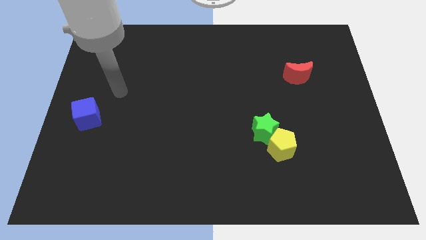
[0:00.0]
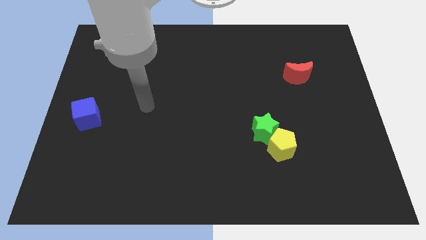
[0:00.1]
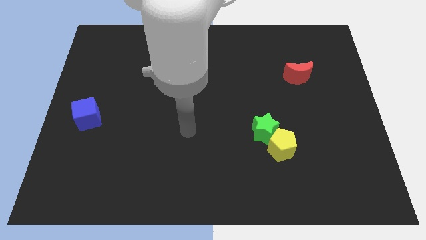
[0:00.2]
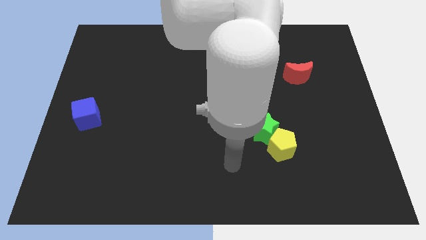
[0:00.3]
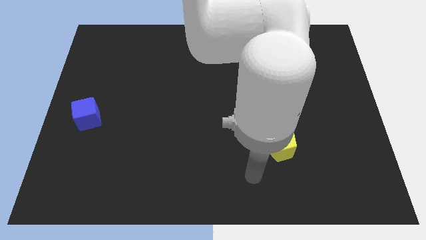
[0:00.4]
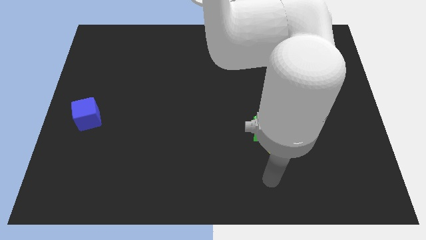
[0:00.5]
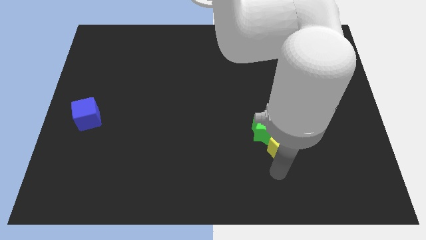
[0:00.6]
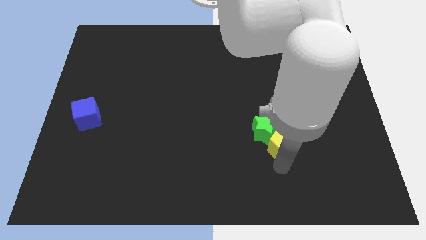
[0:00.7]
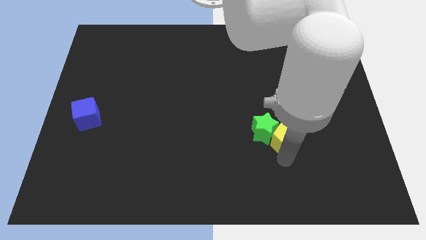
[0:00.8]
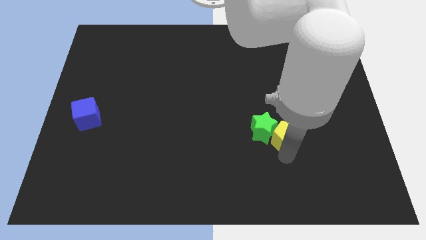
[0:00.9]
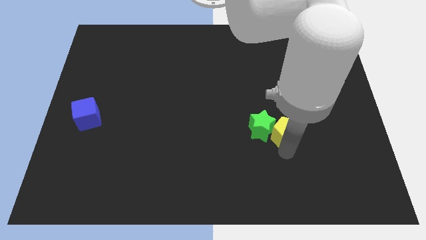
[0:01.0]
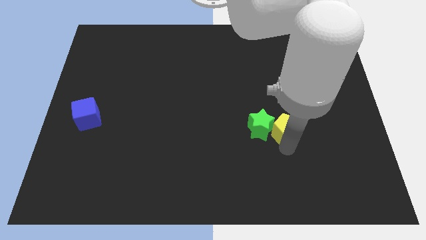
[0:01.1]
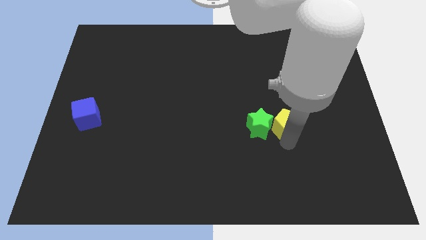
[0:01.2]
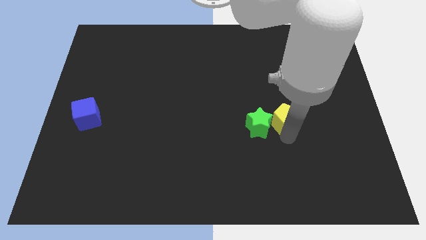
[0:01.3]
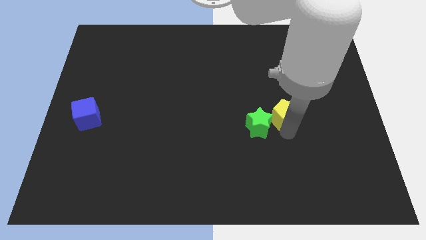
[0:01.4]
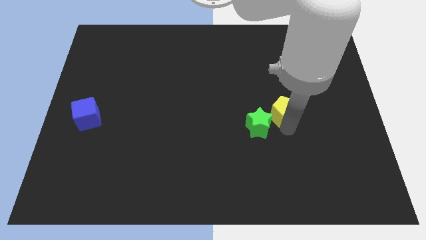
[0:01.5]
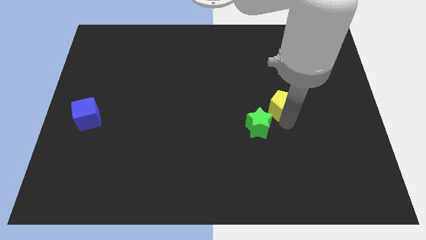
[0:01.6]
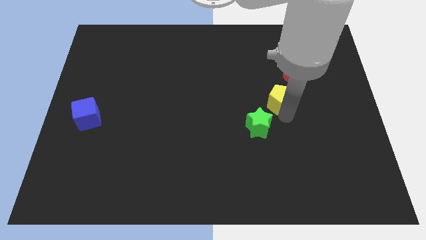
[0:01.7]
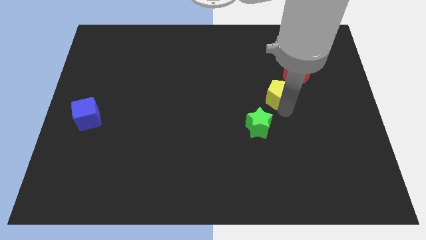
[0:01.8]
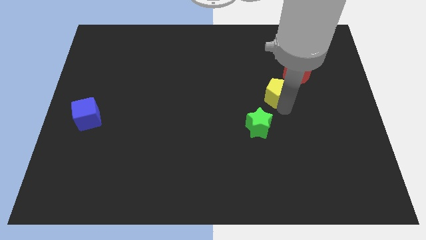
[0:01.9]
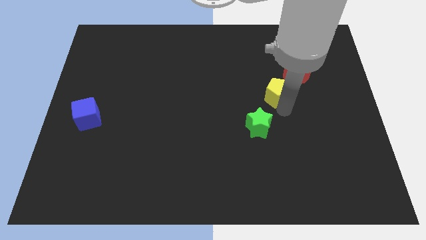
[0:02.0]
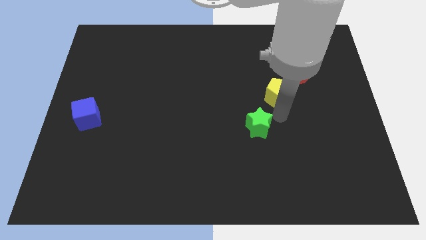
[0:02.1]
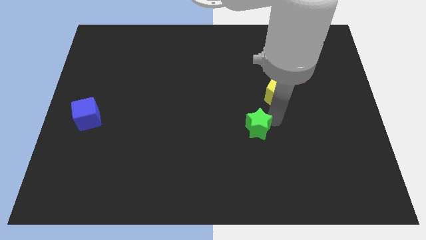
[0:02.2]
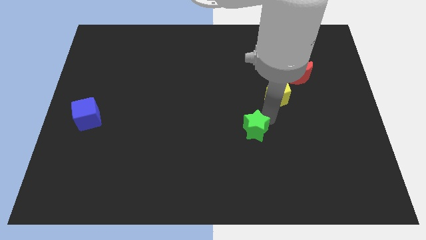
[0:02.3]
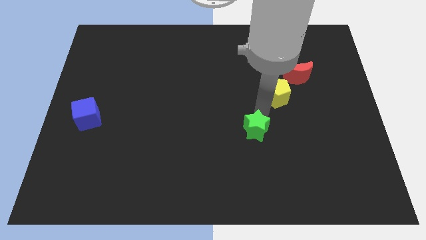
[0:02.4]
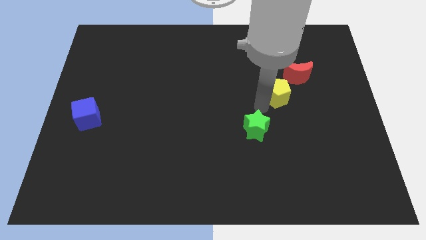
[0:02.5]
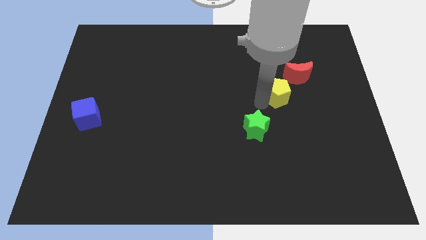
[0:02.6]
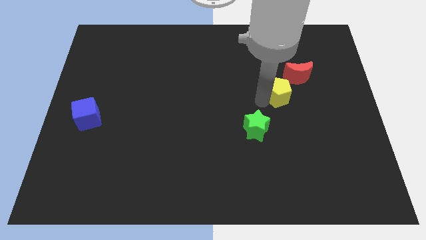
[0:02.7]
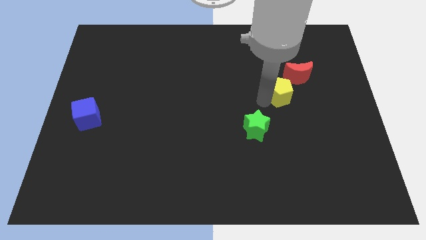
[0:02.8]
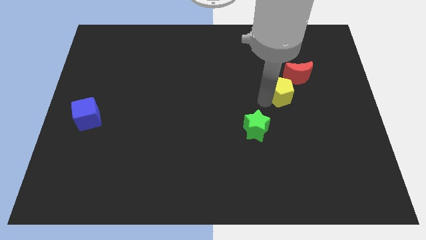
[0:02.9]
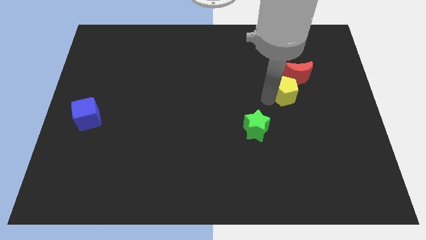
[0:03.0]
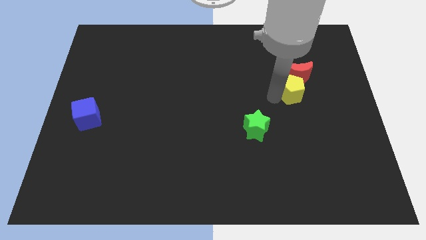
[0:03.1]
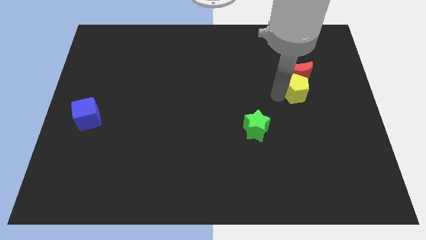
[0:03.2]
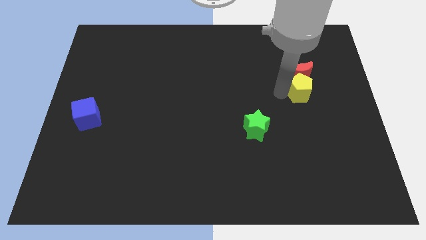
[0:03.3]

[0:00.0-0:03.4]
move the pentagon close to the red moon

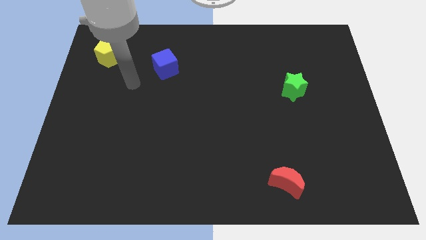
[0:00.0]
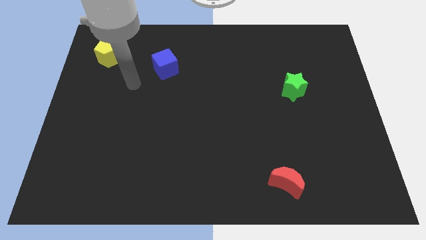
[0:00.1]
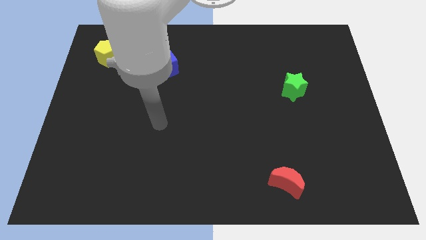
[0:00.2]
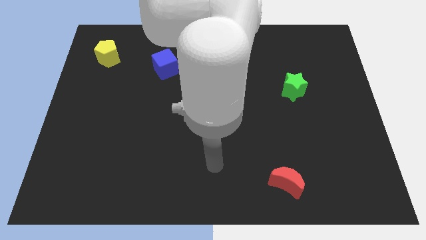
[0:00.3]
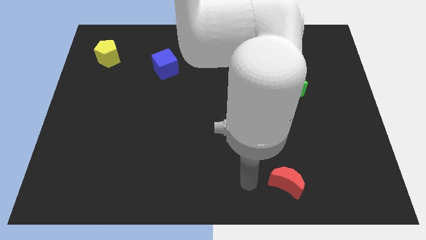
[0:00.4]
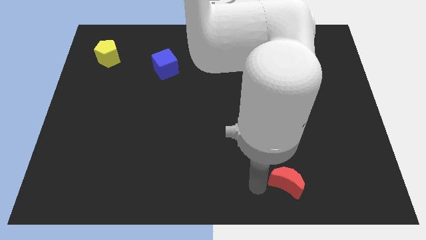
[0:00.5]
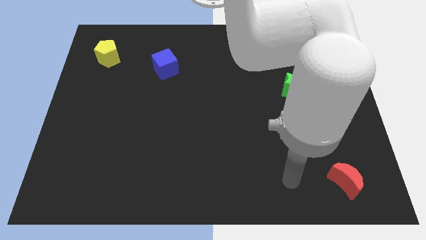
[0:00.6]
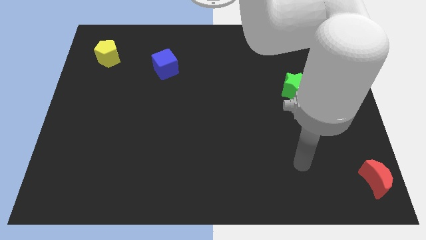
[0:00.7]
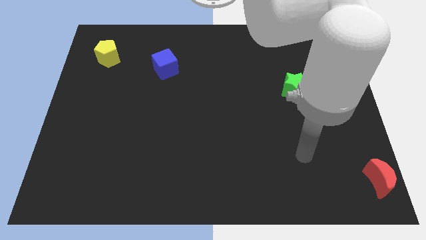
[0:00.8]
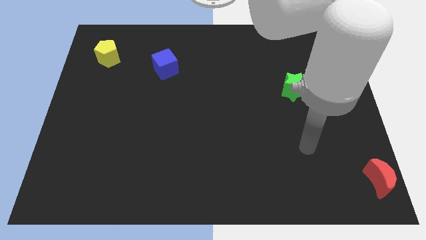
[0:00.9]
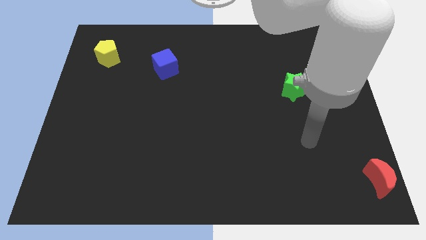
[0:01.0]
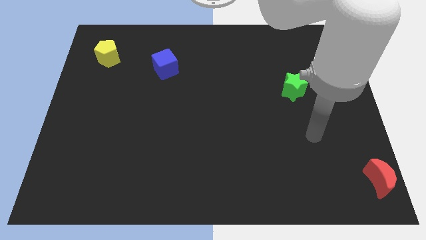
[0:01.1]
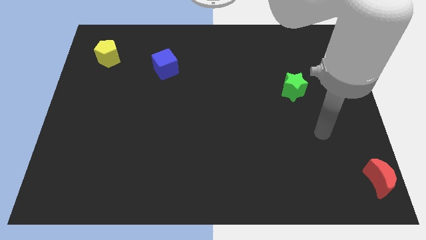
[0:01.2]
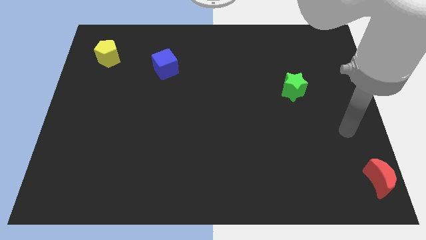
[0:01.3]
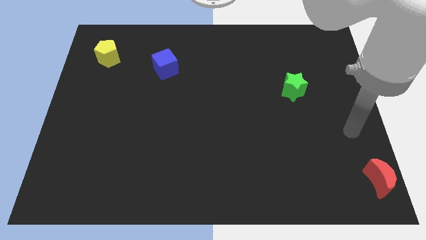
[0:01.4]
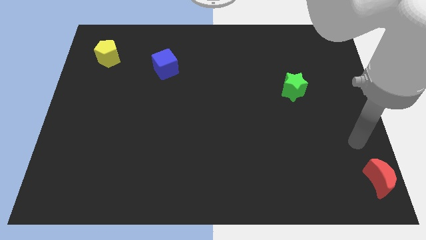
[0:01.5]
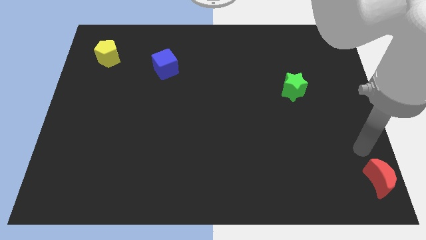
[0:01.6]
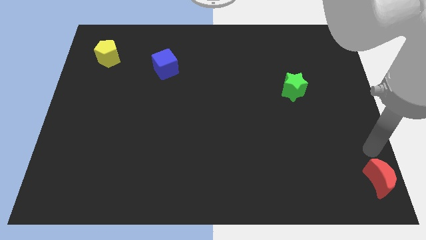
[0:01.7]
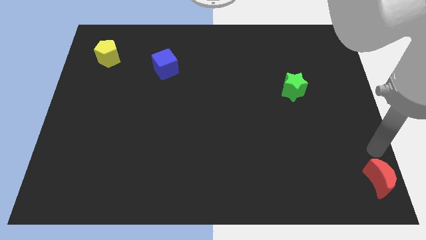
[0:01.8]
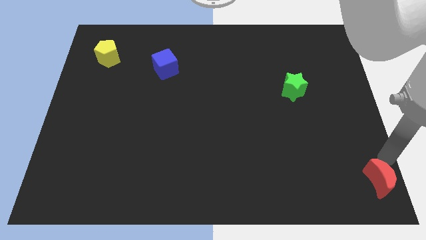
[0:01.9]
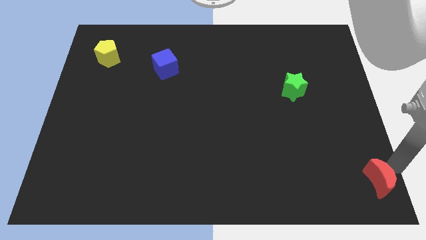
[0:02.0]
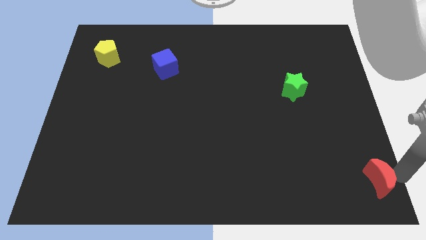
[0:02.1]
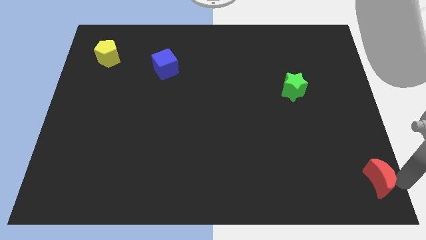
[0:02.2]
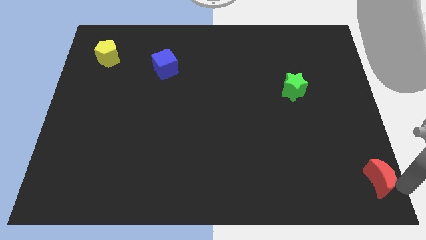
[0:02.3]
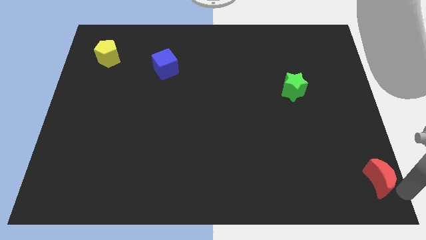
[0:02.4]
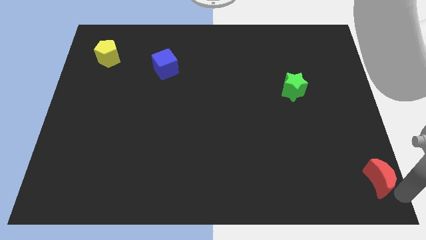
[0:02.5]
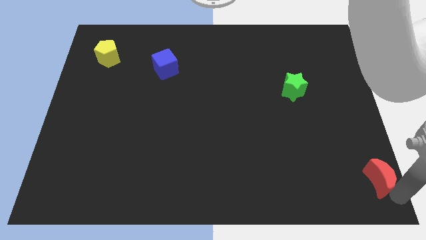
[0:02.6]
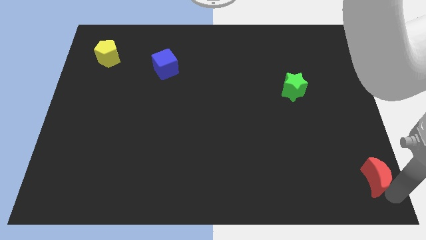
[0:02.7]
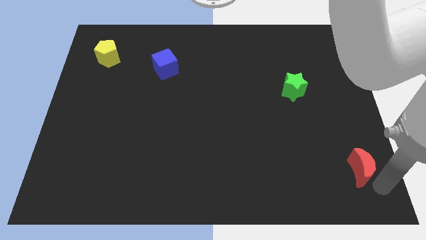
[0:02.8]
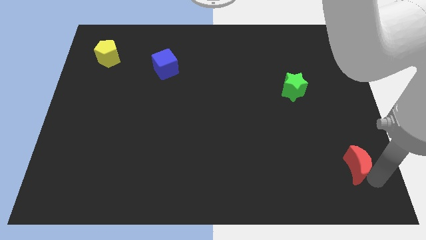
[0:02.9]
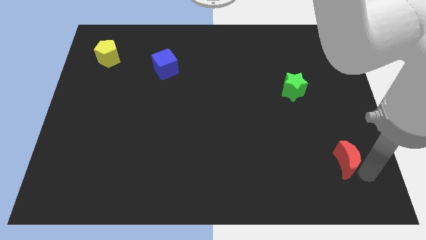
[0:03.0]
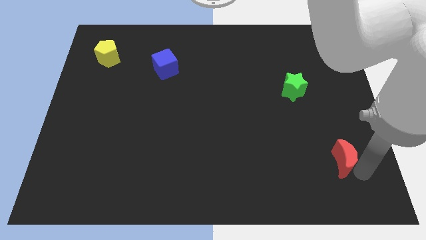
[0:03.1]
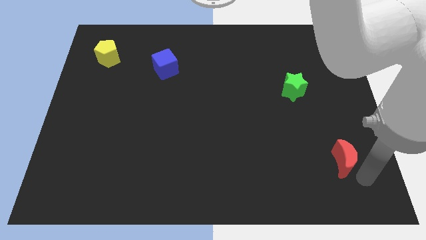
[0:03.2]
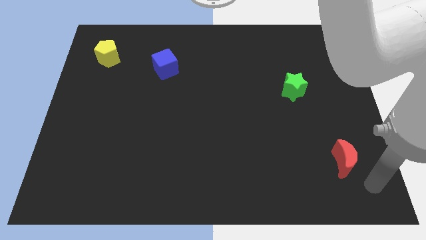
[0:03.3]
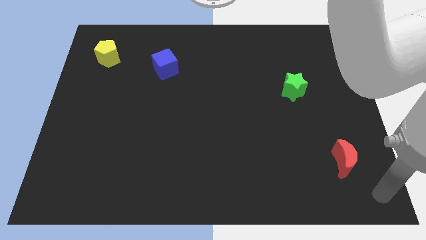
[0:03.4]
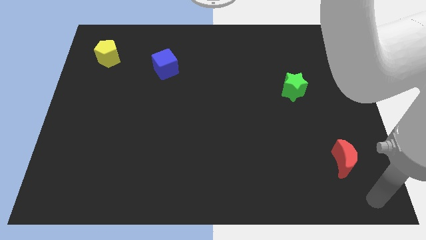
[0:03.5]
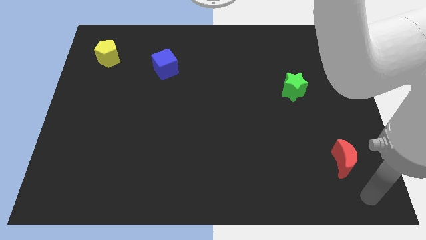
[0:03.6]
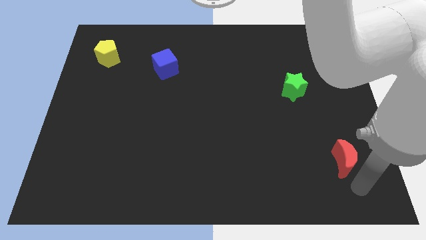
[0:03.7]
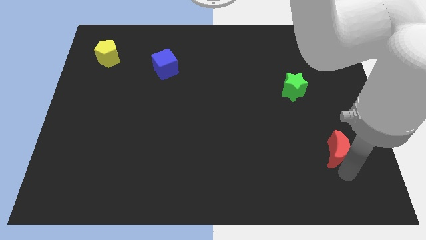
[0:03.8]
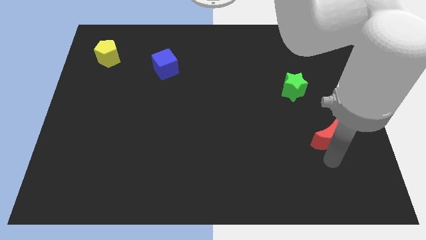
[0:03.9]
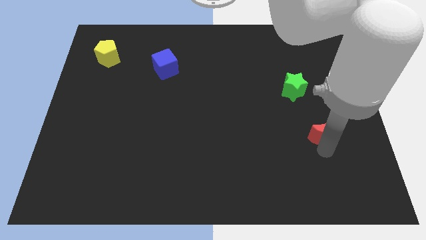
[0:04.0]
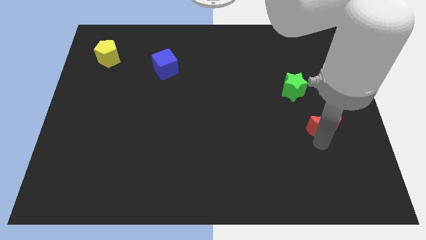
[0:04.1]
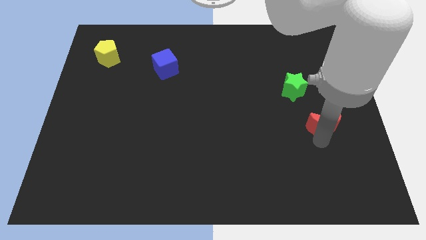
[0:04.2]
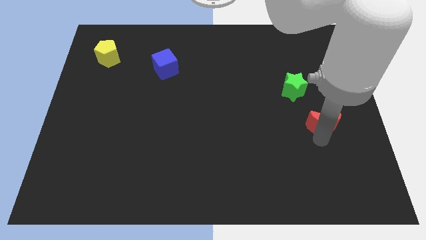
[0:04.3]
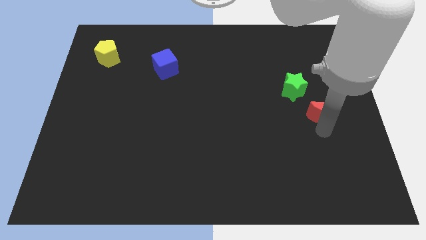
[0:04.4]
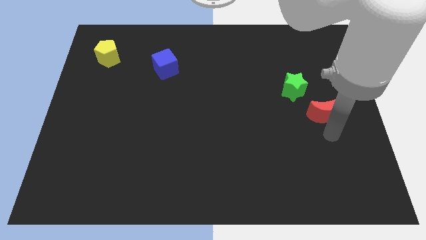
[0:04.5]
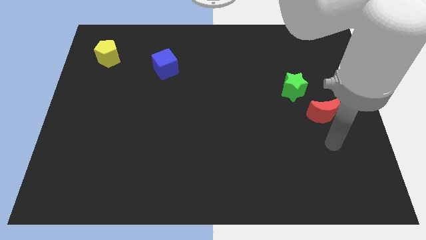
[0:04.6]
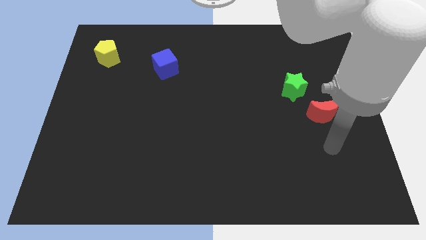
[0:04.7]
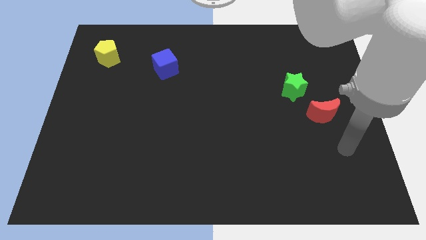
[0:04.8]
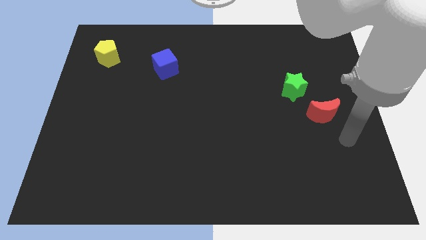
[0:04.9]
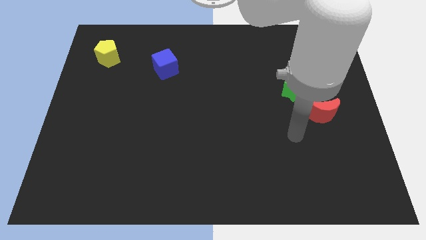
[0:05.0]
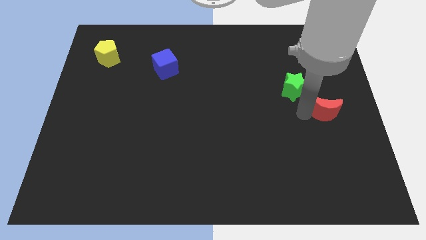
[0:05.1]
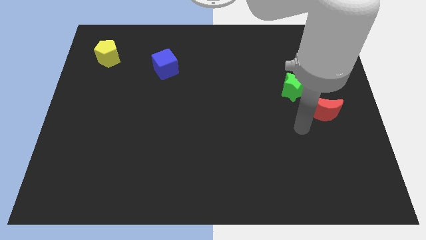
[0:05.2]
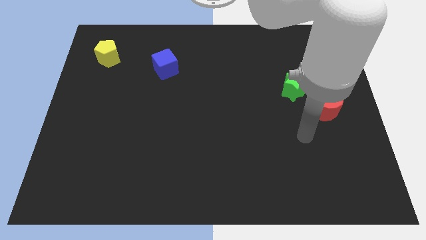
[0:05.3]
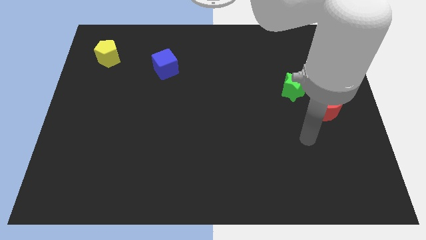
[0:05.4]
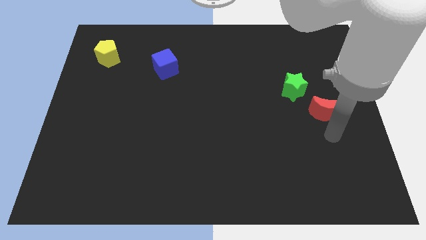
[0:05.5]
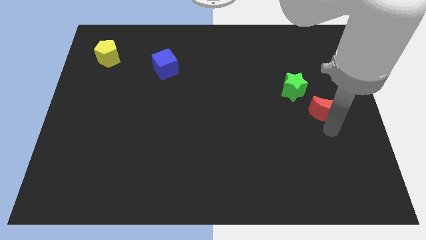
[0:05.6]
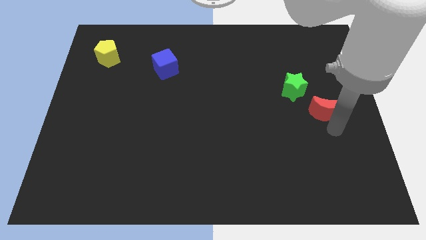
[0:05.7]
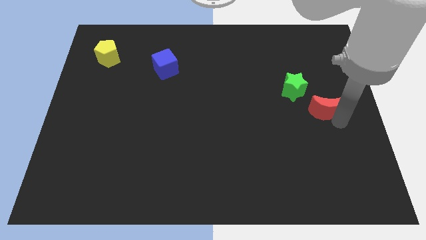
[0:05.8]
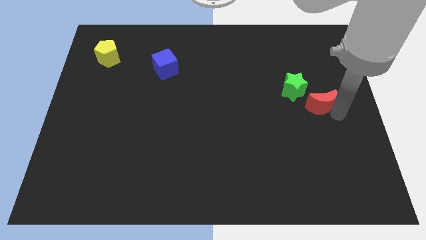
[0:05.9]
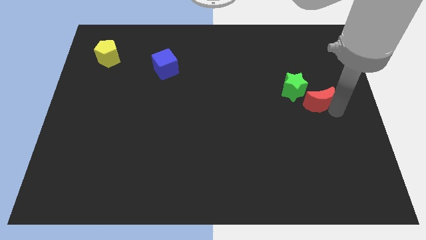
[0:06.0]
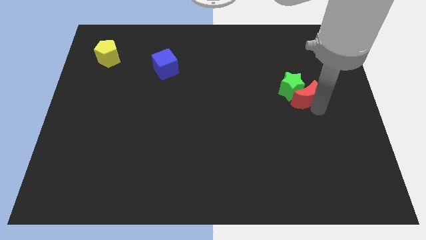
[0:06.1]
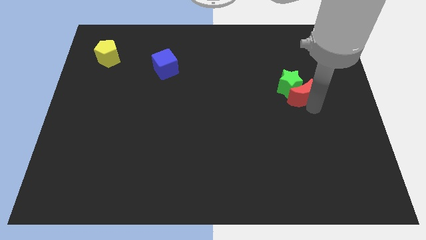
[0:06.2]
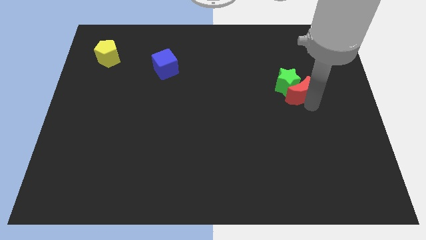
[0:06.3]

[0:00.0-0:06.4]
put the moon close to the green star
